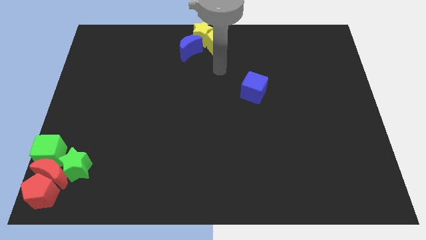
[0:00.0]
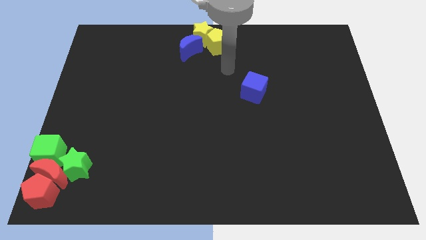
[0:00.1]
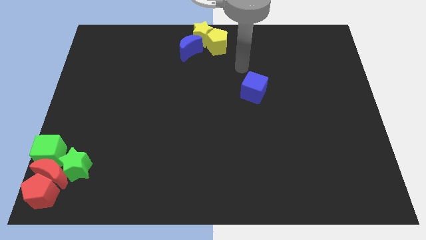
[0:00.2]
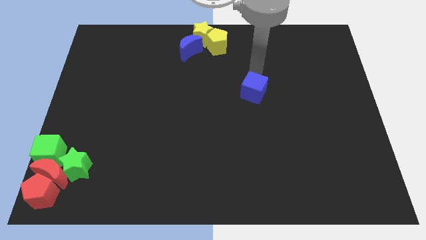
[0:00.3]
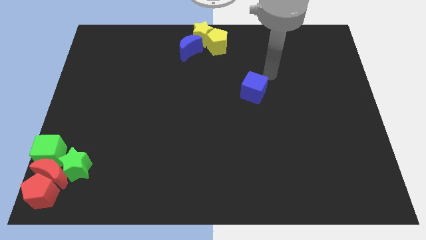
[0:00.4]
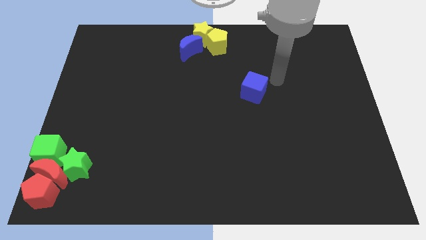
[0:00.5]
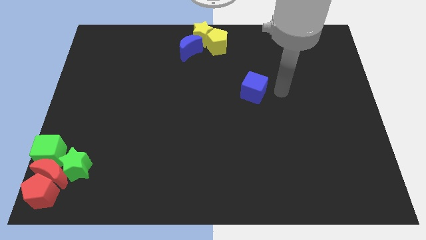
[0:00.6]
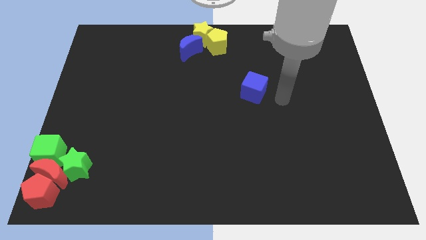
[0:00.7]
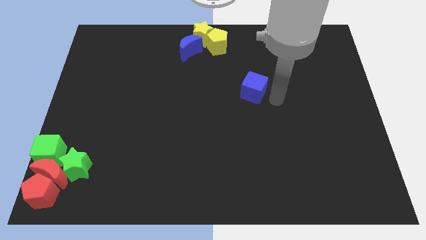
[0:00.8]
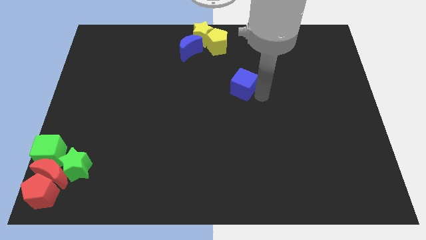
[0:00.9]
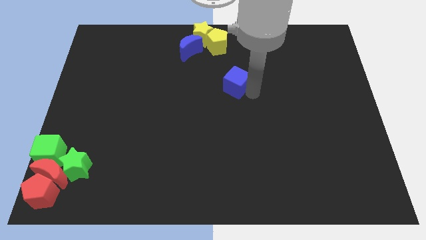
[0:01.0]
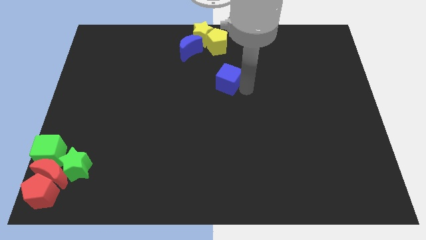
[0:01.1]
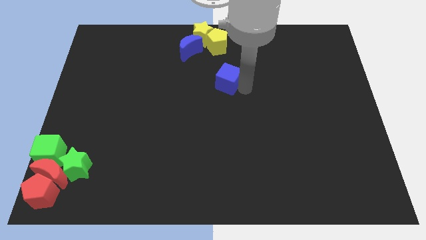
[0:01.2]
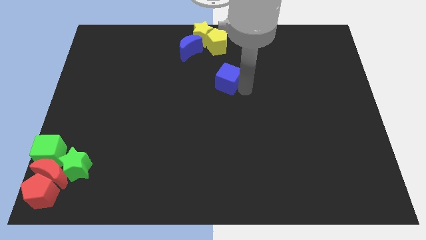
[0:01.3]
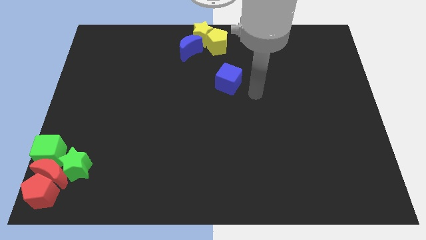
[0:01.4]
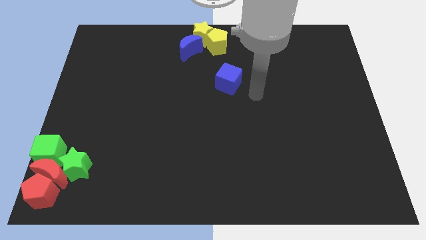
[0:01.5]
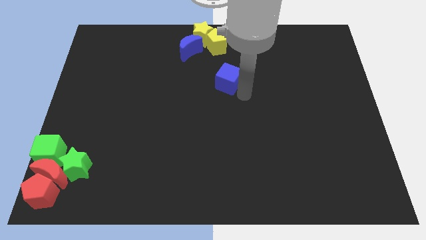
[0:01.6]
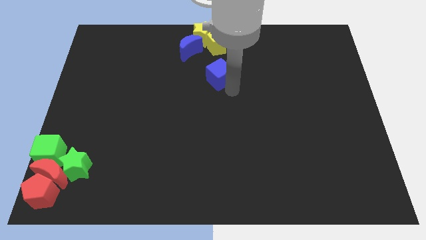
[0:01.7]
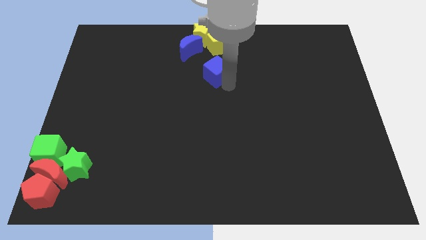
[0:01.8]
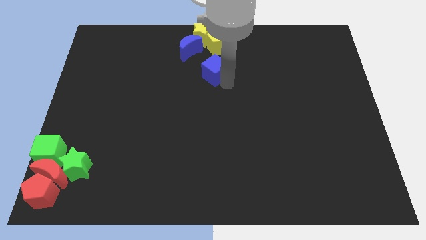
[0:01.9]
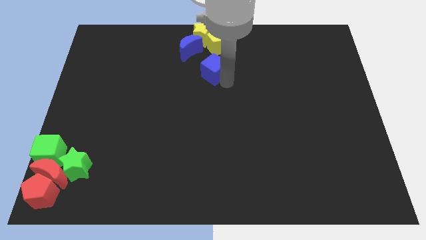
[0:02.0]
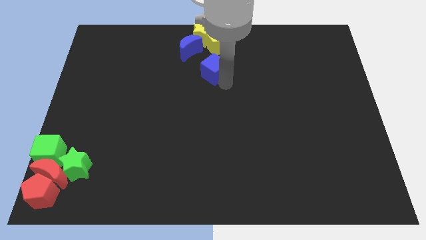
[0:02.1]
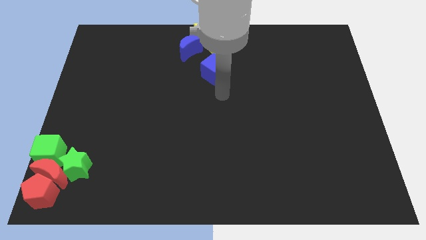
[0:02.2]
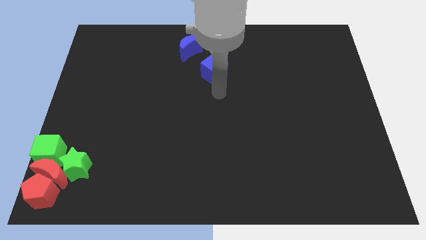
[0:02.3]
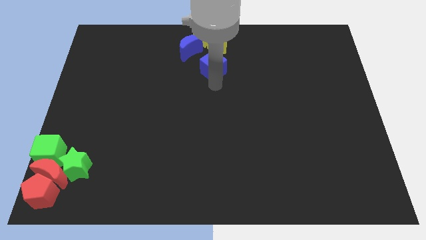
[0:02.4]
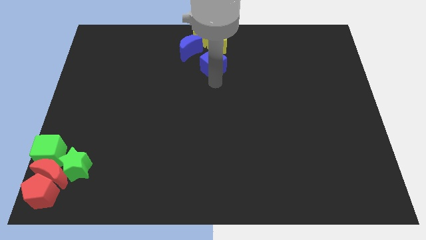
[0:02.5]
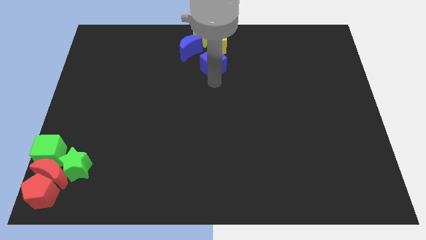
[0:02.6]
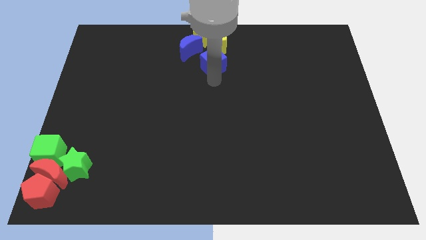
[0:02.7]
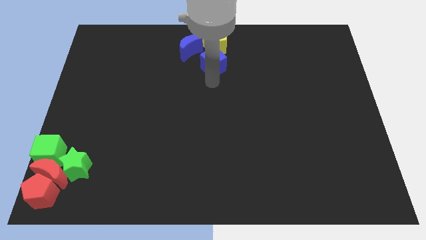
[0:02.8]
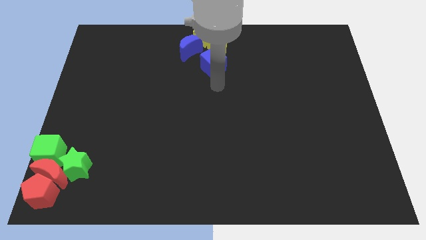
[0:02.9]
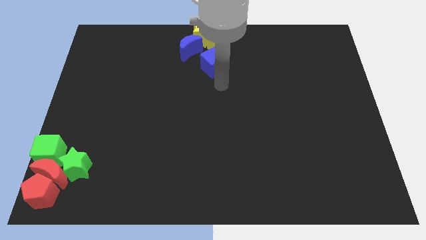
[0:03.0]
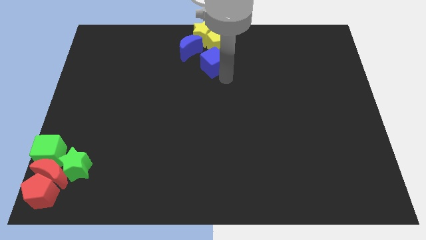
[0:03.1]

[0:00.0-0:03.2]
move the blue cube vertically below the yellow pentagon

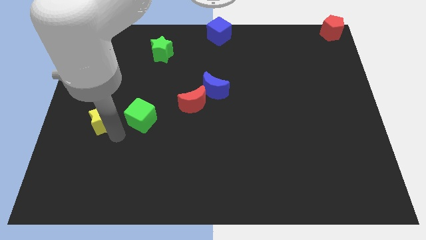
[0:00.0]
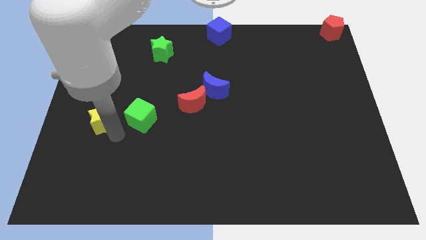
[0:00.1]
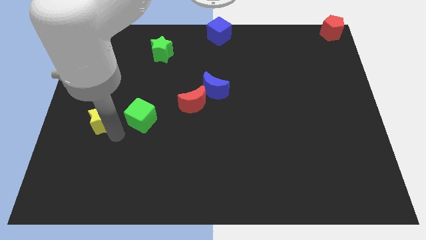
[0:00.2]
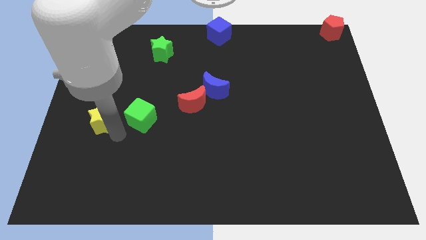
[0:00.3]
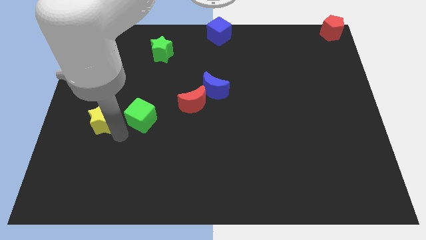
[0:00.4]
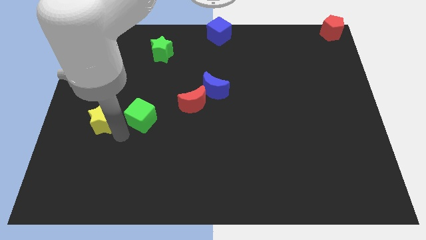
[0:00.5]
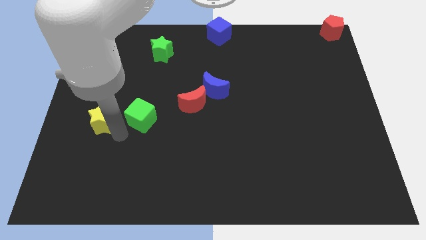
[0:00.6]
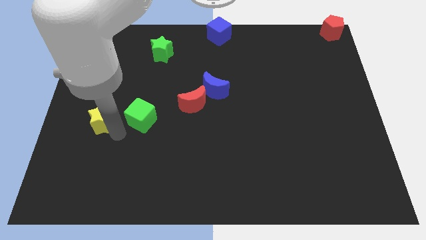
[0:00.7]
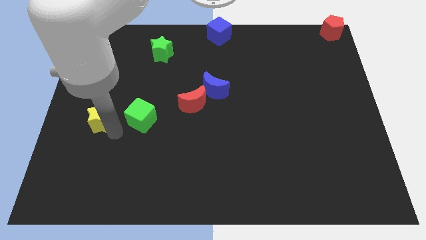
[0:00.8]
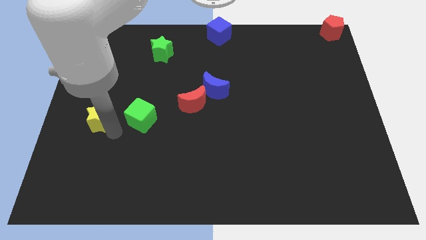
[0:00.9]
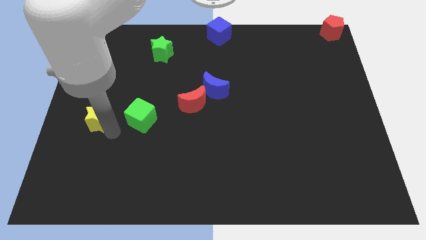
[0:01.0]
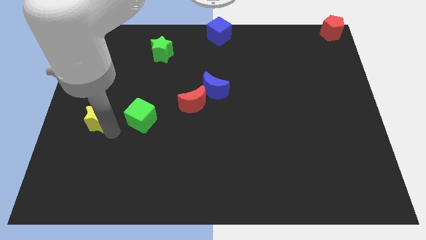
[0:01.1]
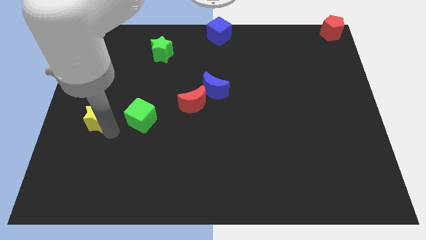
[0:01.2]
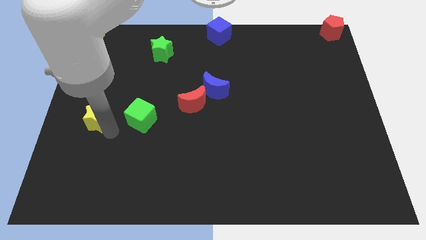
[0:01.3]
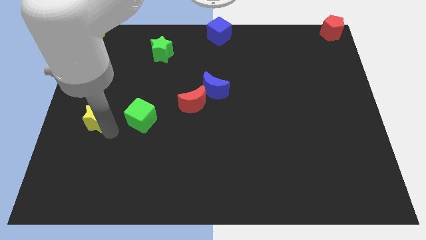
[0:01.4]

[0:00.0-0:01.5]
place the yellow star to the left of the green cube

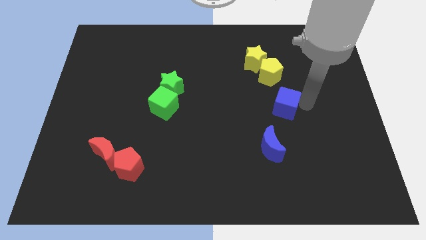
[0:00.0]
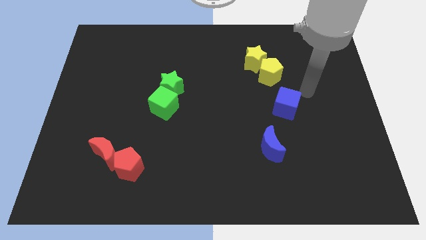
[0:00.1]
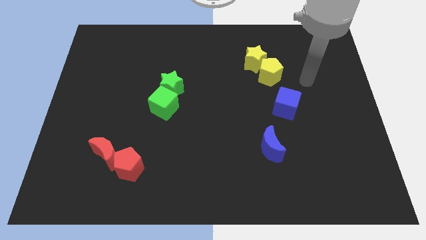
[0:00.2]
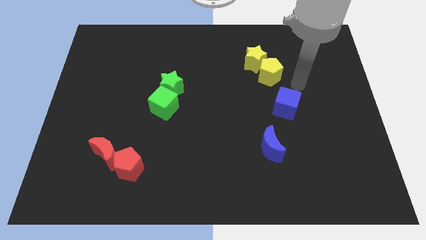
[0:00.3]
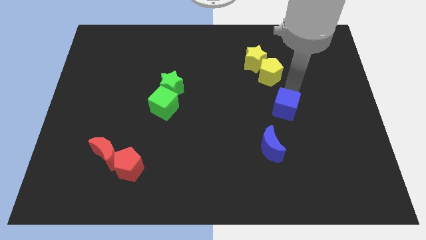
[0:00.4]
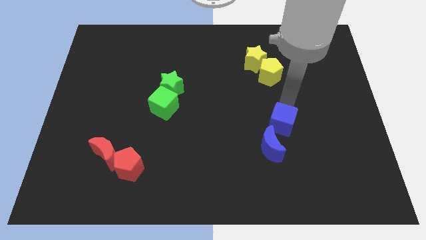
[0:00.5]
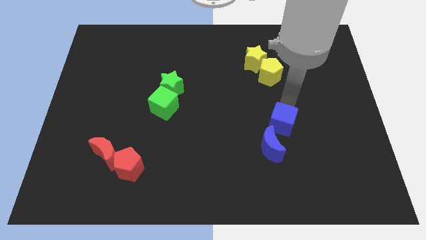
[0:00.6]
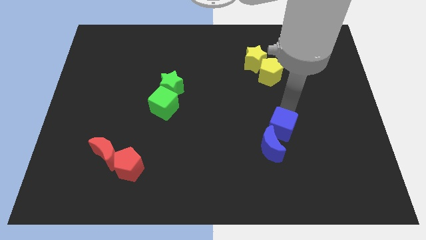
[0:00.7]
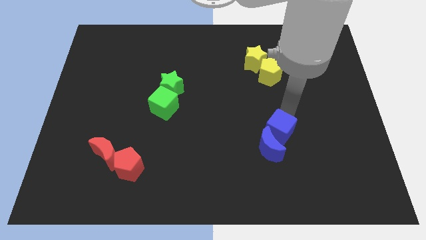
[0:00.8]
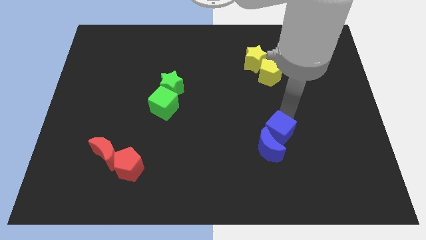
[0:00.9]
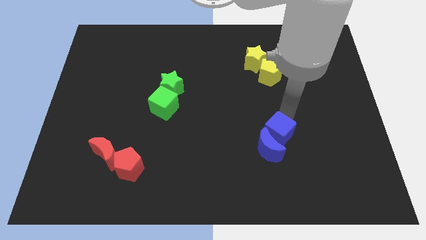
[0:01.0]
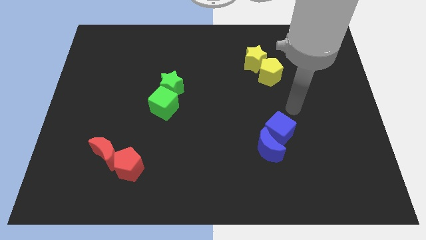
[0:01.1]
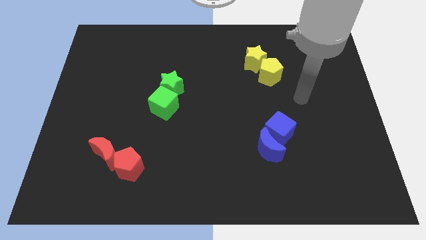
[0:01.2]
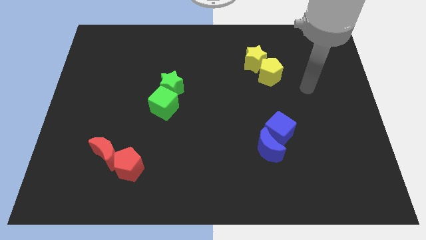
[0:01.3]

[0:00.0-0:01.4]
push the blue cube into the blue crescent

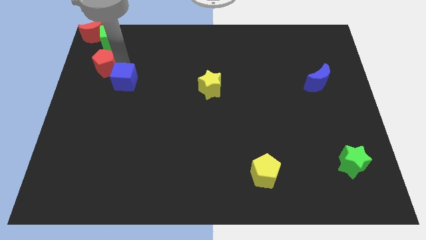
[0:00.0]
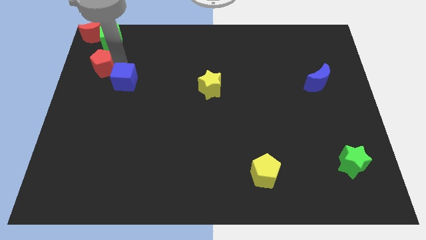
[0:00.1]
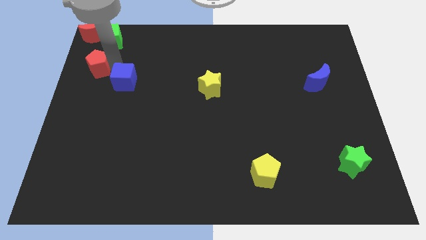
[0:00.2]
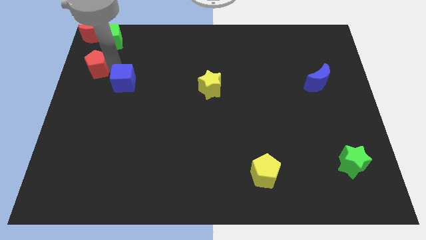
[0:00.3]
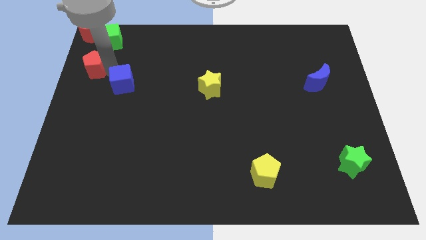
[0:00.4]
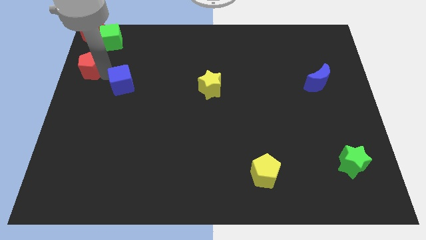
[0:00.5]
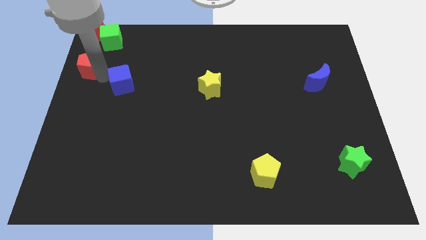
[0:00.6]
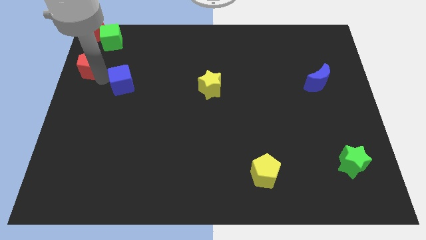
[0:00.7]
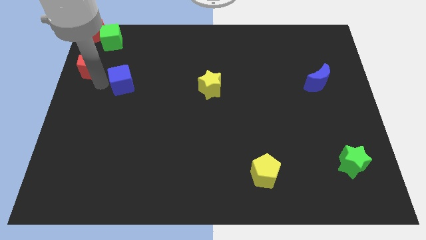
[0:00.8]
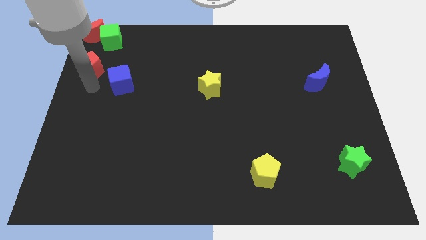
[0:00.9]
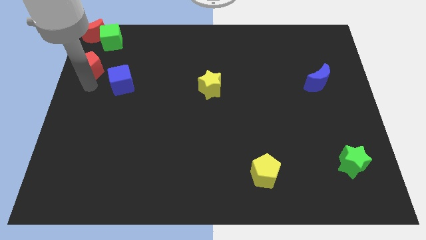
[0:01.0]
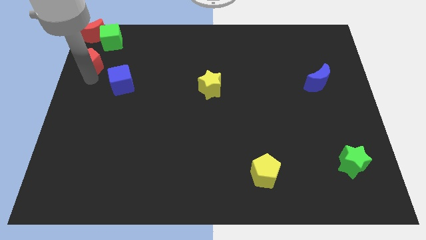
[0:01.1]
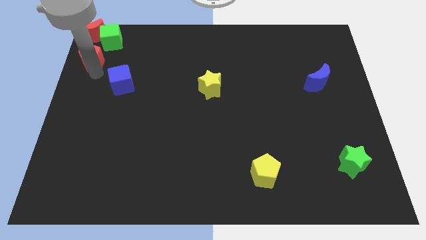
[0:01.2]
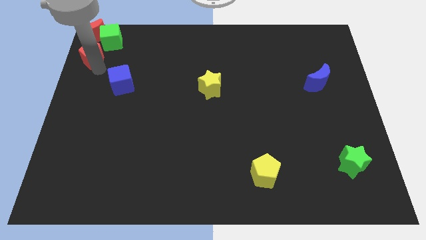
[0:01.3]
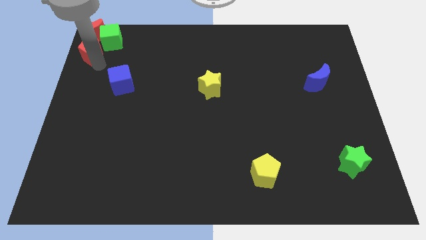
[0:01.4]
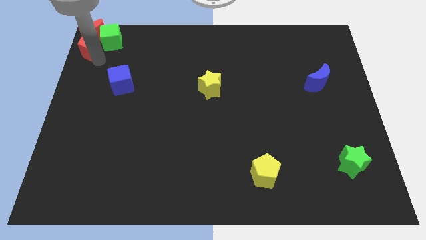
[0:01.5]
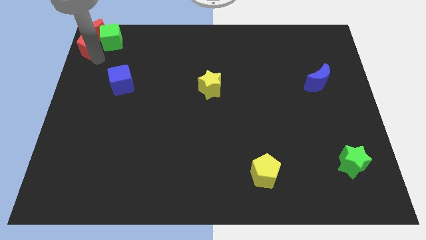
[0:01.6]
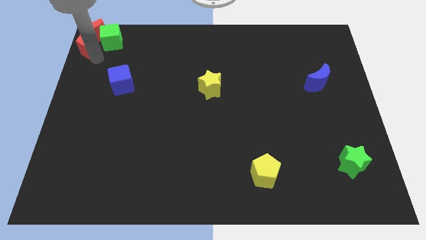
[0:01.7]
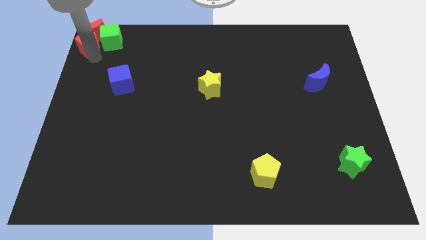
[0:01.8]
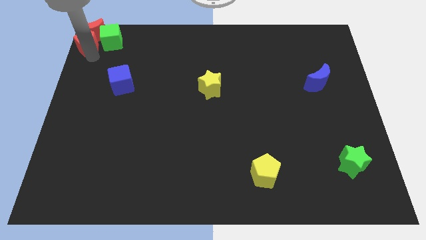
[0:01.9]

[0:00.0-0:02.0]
place the red pentagon below the red crescent

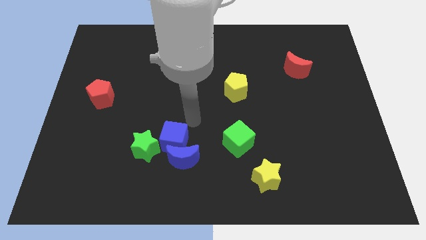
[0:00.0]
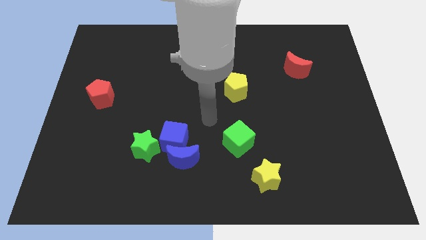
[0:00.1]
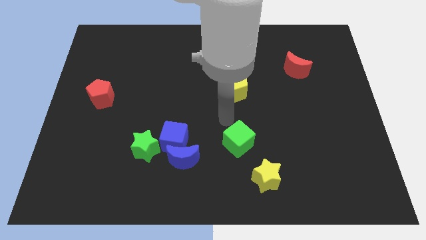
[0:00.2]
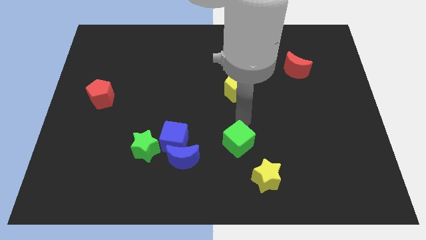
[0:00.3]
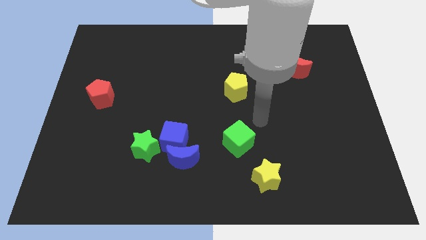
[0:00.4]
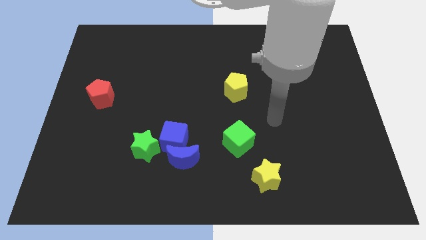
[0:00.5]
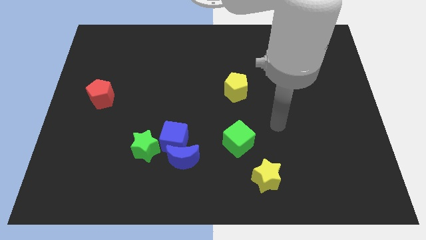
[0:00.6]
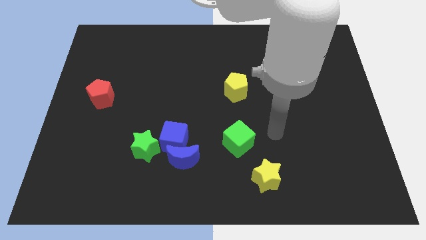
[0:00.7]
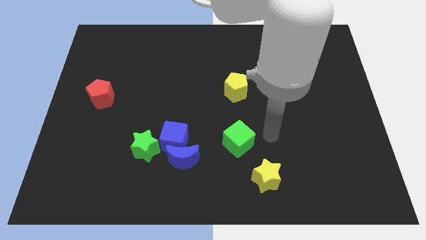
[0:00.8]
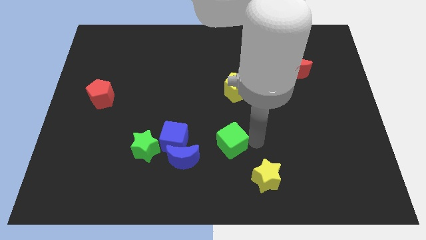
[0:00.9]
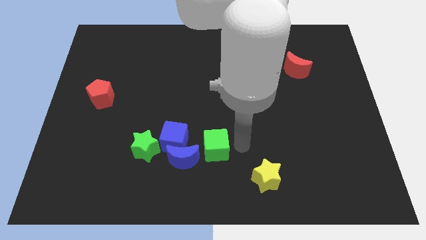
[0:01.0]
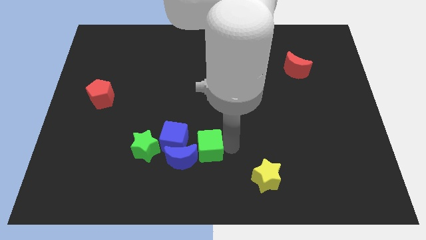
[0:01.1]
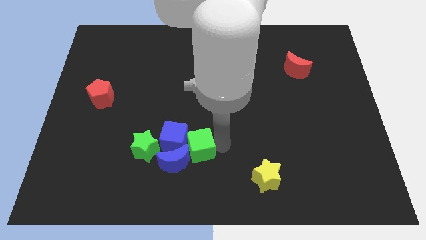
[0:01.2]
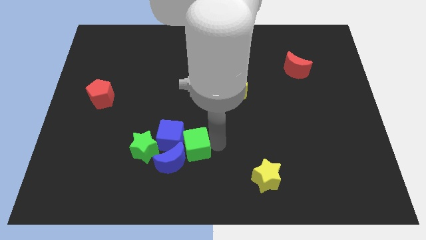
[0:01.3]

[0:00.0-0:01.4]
push the green cube right to the blue blocks
